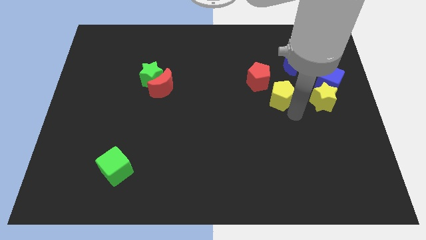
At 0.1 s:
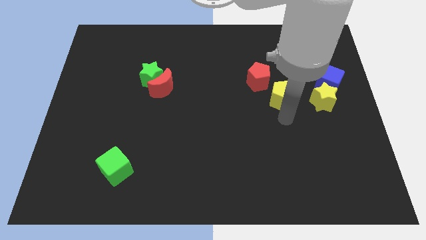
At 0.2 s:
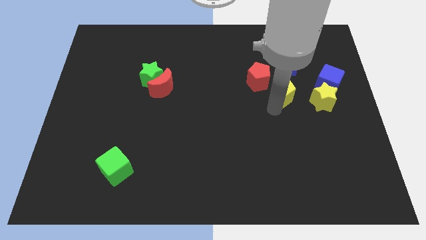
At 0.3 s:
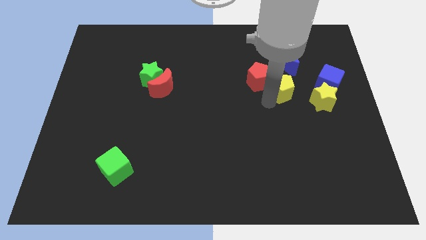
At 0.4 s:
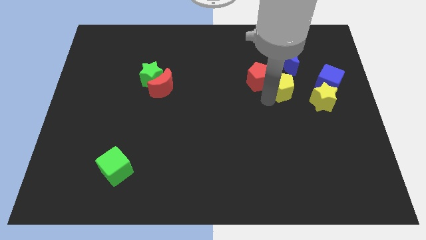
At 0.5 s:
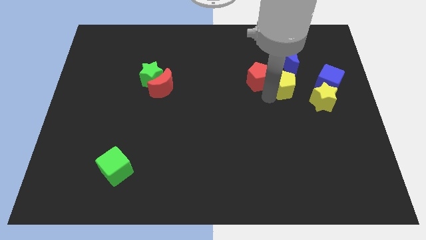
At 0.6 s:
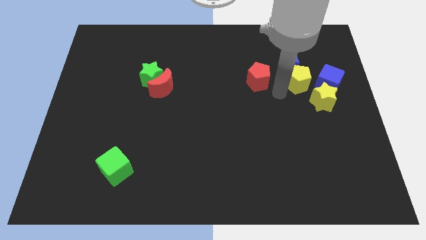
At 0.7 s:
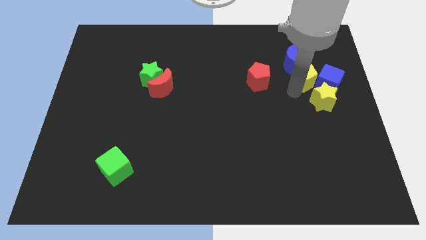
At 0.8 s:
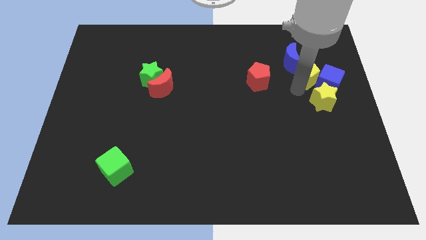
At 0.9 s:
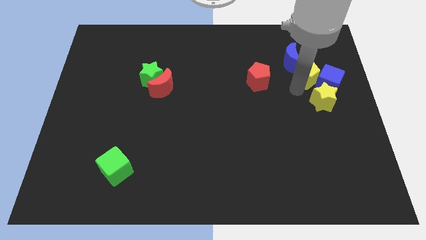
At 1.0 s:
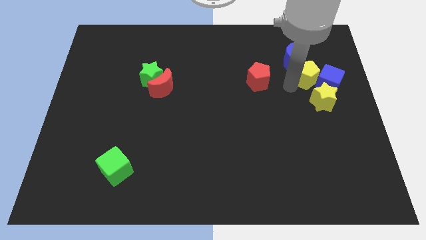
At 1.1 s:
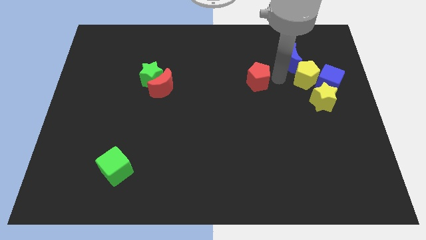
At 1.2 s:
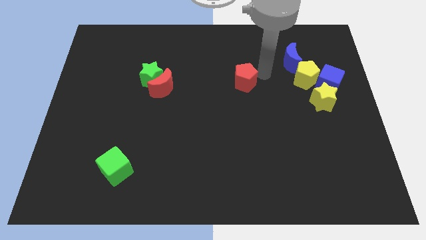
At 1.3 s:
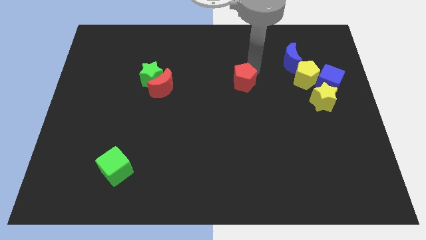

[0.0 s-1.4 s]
place the yellow pentagon between the blue cube and blue crescent

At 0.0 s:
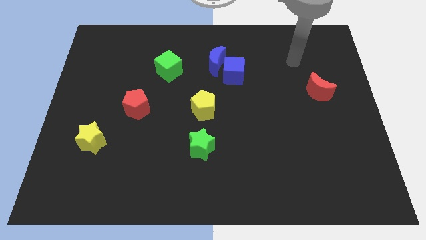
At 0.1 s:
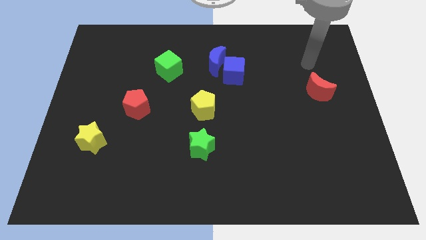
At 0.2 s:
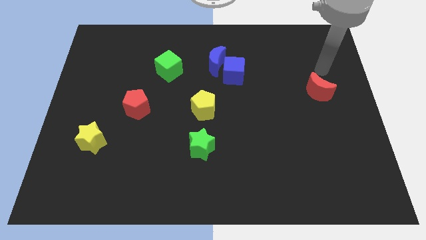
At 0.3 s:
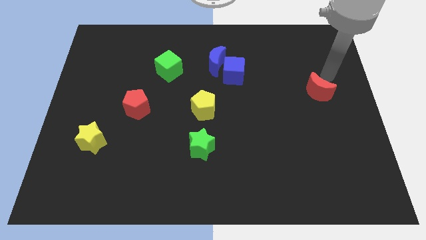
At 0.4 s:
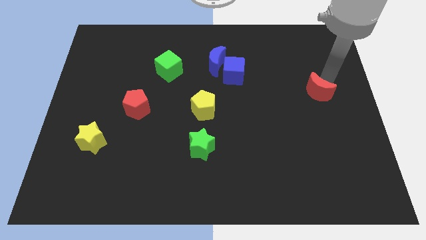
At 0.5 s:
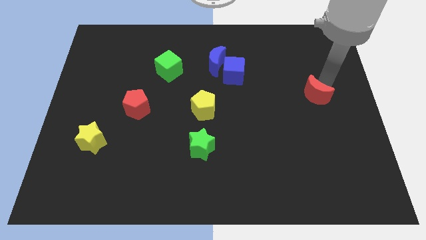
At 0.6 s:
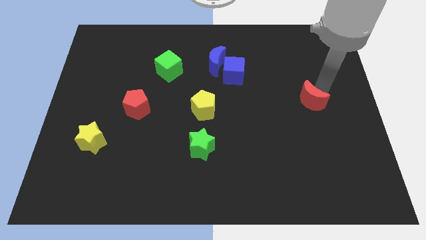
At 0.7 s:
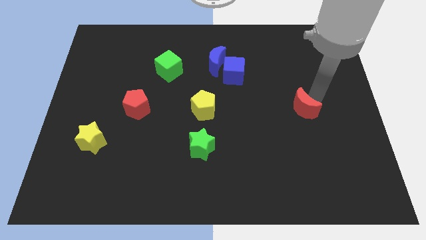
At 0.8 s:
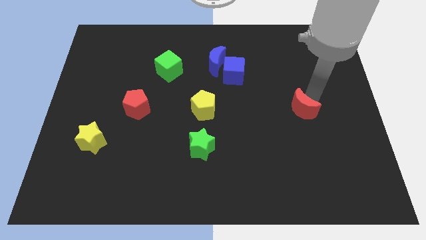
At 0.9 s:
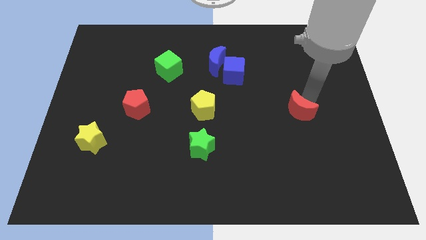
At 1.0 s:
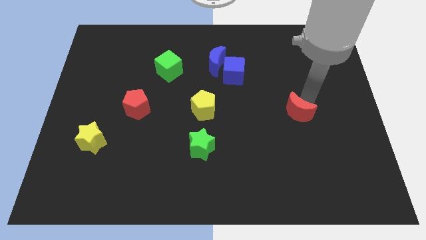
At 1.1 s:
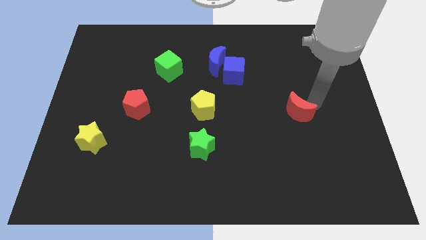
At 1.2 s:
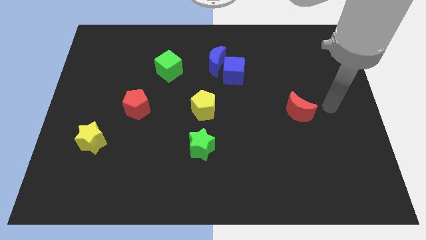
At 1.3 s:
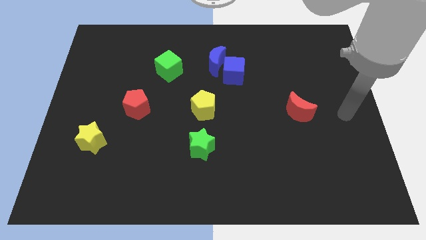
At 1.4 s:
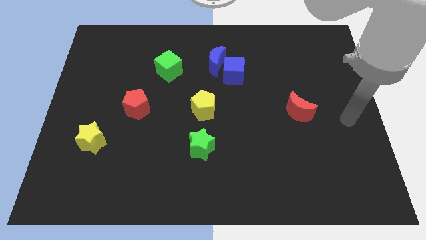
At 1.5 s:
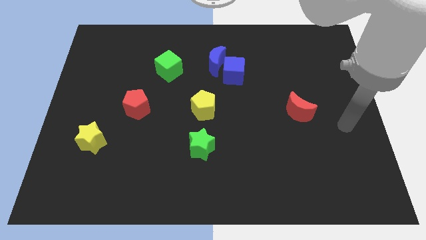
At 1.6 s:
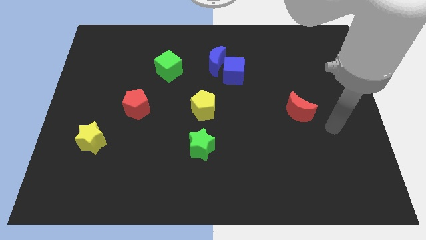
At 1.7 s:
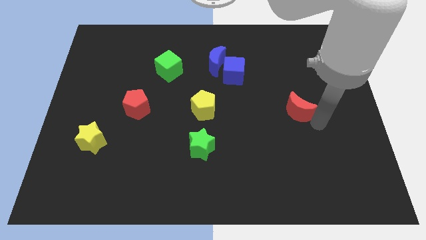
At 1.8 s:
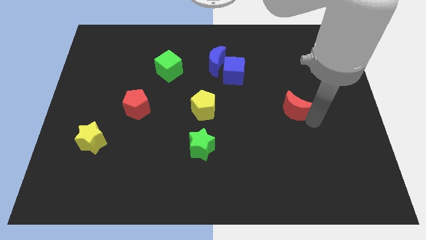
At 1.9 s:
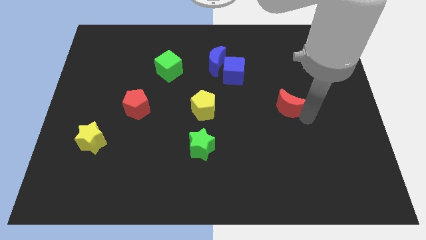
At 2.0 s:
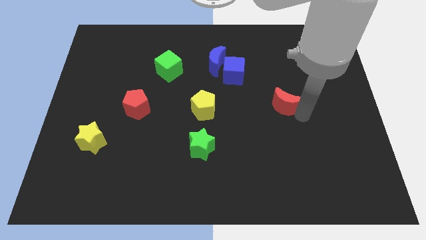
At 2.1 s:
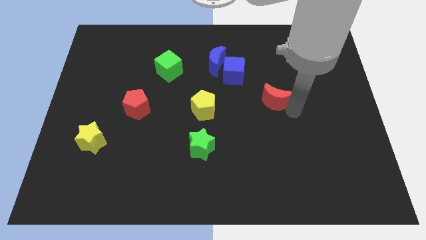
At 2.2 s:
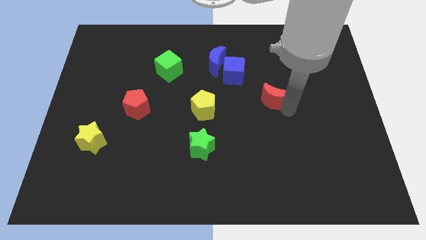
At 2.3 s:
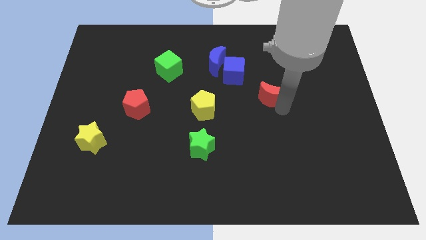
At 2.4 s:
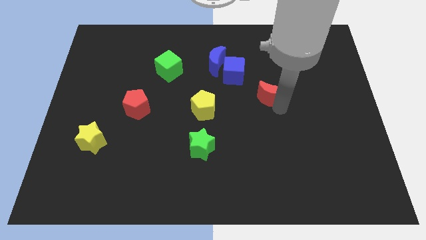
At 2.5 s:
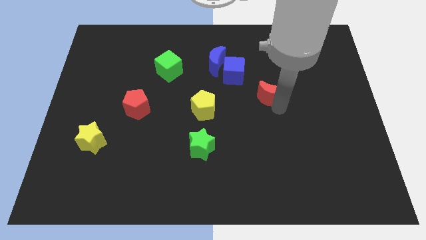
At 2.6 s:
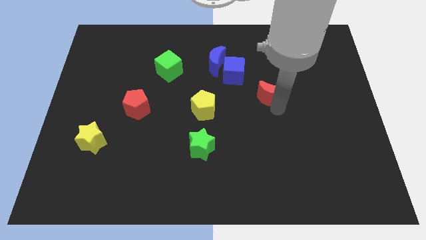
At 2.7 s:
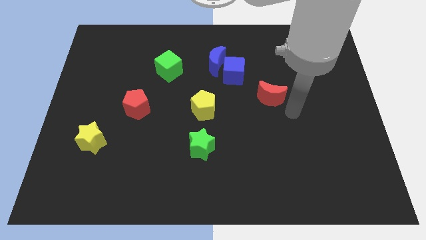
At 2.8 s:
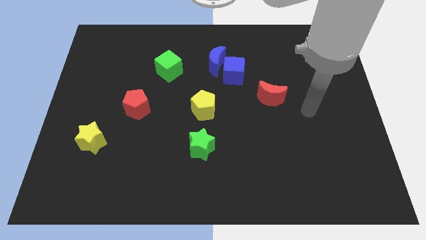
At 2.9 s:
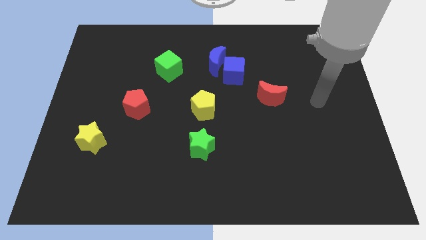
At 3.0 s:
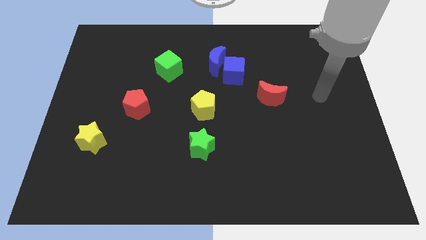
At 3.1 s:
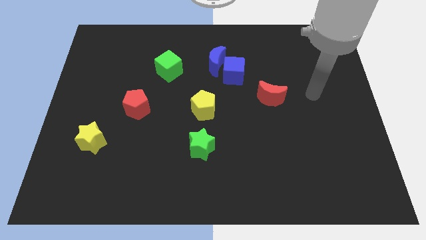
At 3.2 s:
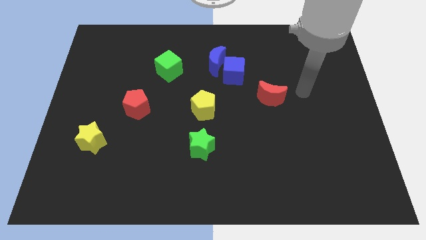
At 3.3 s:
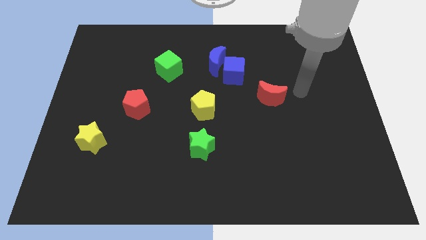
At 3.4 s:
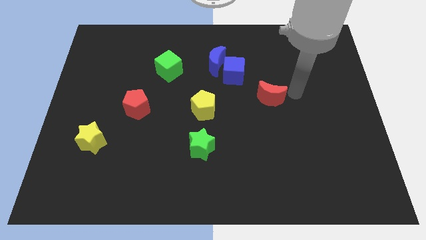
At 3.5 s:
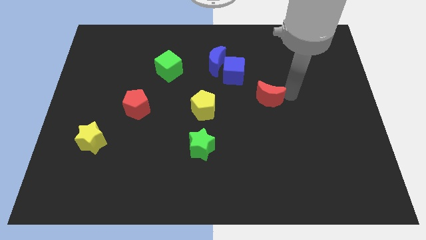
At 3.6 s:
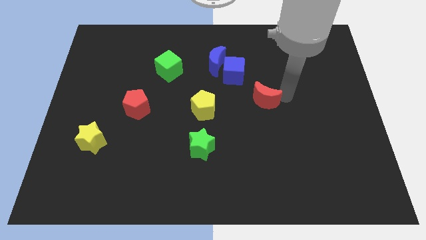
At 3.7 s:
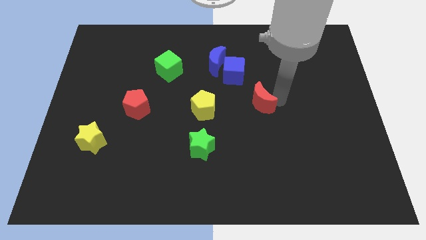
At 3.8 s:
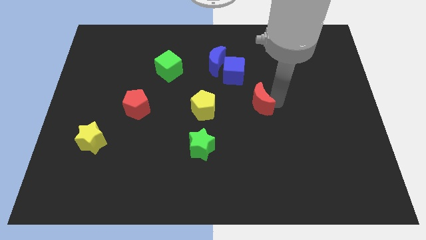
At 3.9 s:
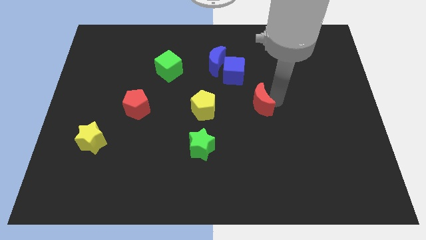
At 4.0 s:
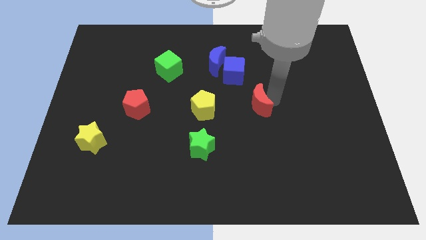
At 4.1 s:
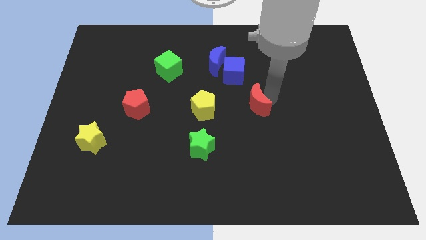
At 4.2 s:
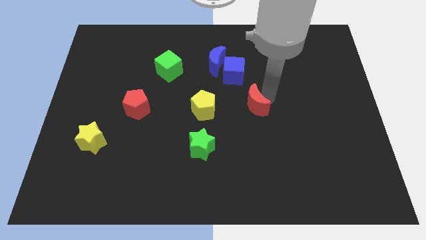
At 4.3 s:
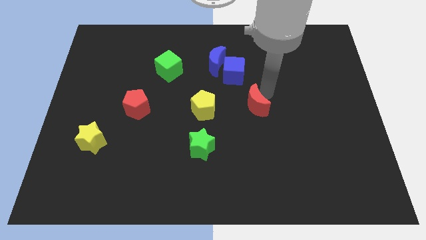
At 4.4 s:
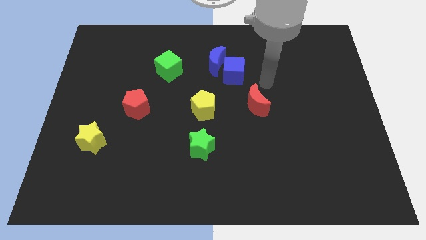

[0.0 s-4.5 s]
push the red moon to the horizontal right of the yellow pentagon

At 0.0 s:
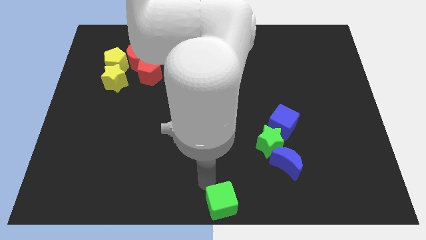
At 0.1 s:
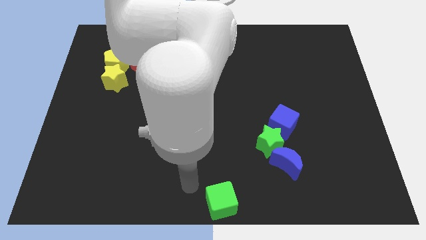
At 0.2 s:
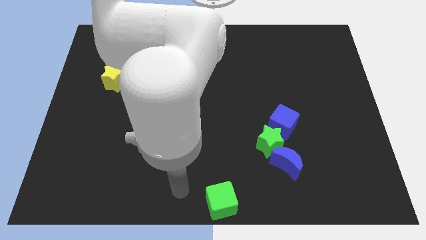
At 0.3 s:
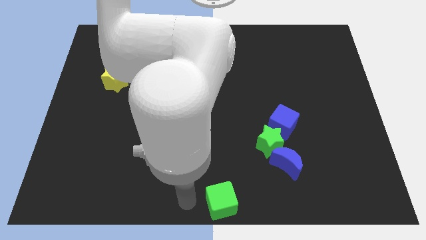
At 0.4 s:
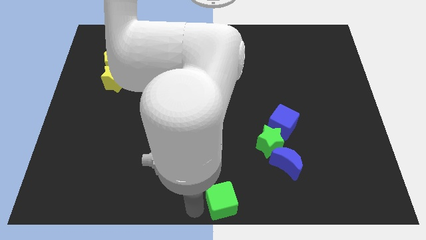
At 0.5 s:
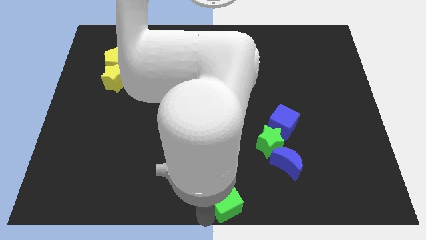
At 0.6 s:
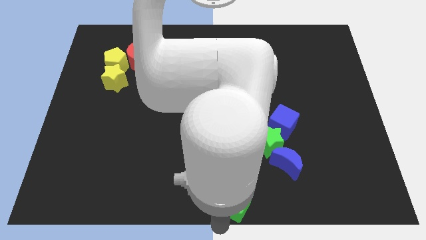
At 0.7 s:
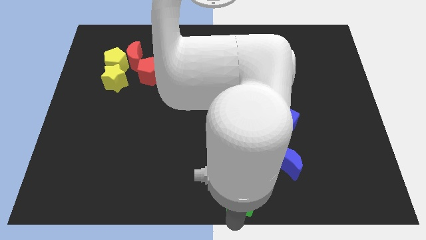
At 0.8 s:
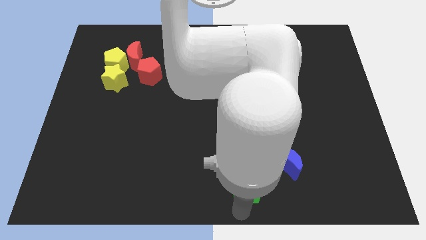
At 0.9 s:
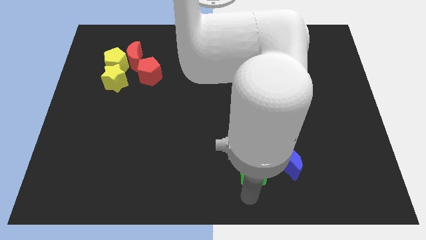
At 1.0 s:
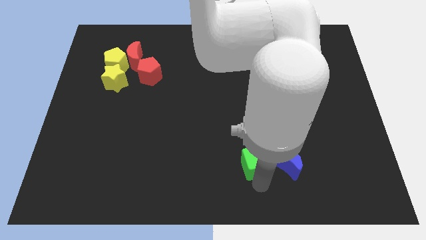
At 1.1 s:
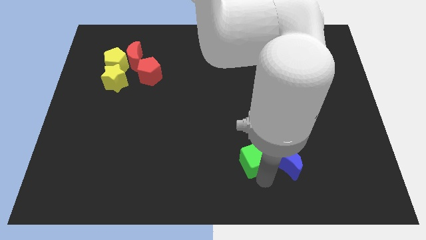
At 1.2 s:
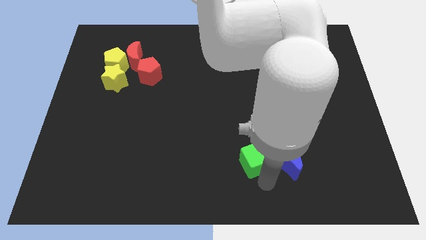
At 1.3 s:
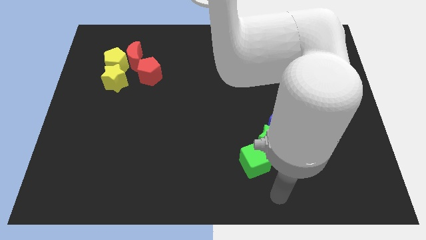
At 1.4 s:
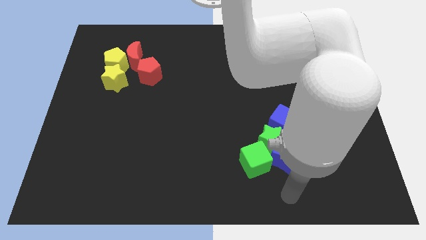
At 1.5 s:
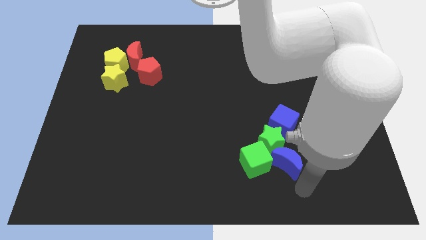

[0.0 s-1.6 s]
place green cube into the green star

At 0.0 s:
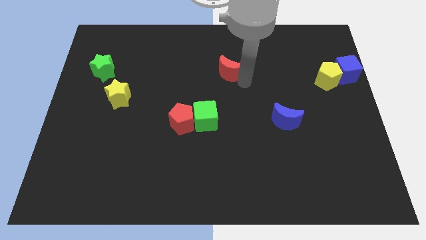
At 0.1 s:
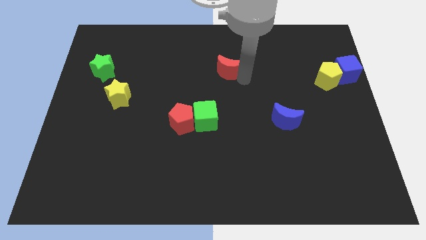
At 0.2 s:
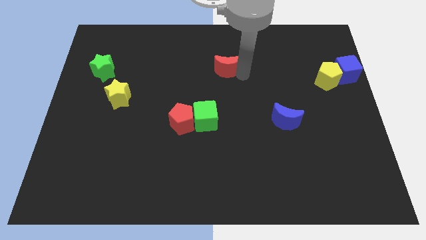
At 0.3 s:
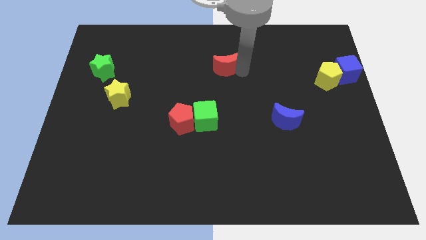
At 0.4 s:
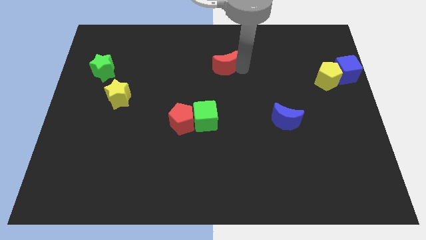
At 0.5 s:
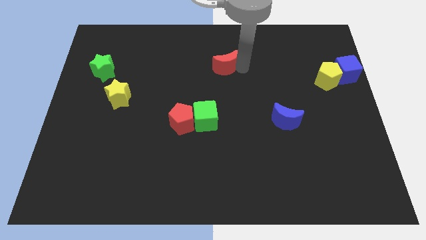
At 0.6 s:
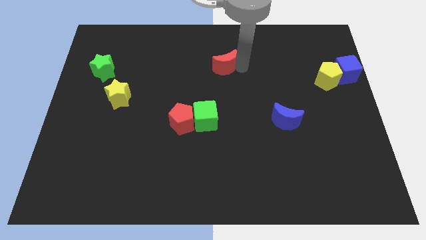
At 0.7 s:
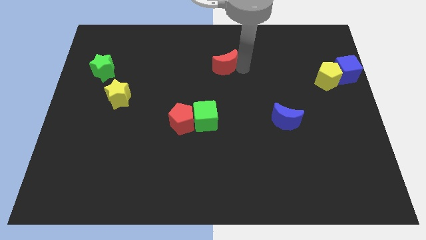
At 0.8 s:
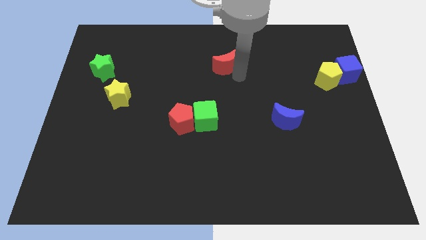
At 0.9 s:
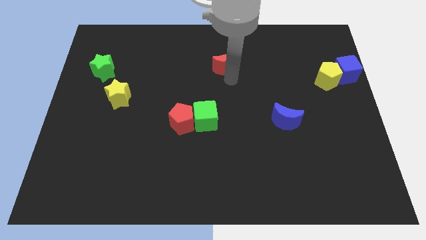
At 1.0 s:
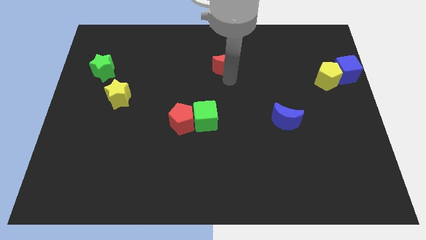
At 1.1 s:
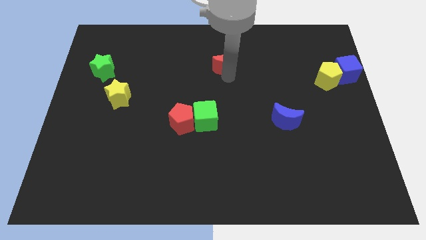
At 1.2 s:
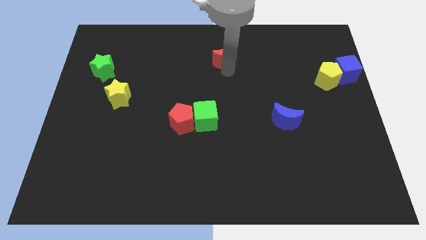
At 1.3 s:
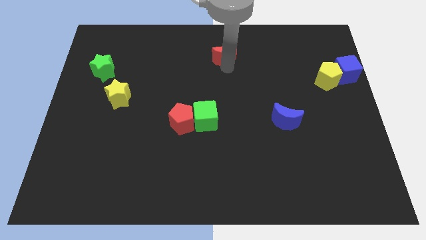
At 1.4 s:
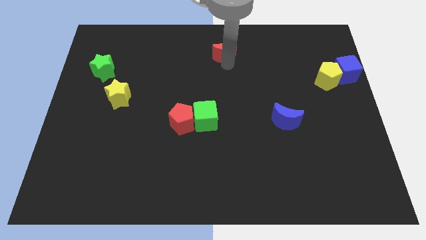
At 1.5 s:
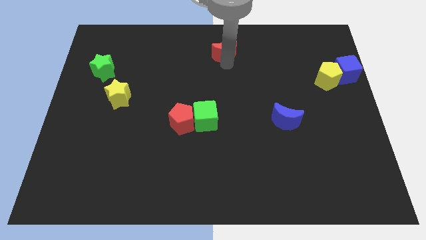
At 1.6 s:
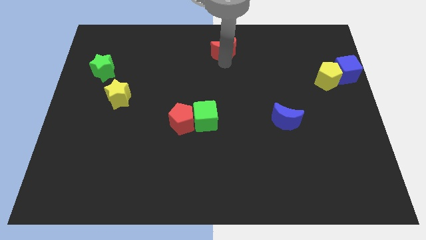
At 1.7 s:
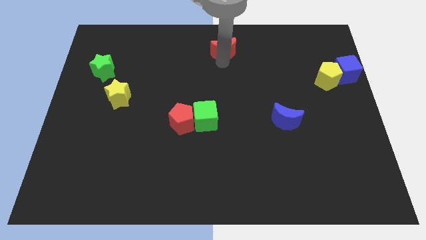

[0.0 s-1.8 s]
move the red crescent slightly towards up
